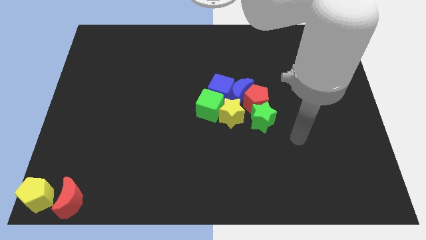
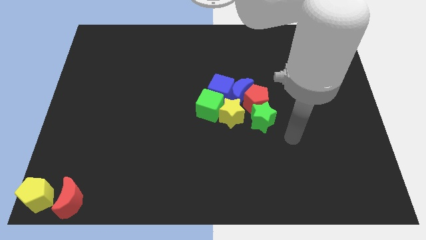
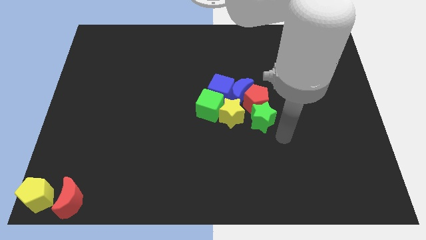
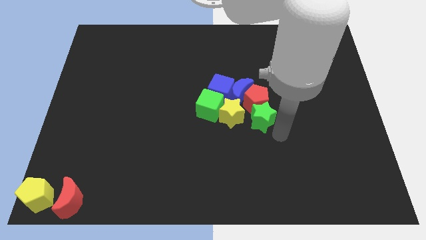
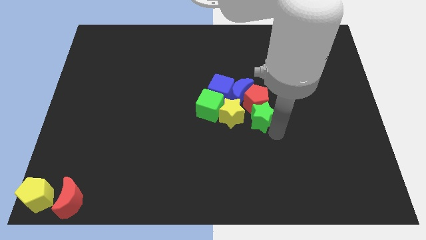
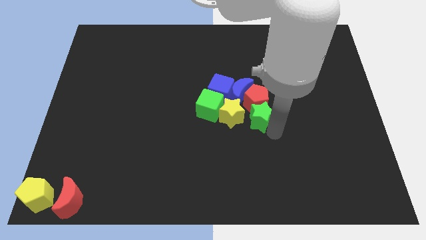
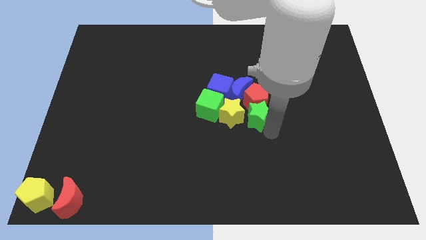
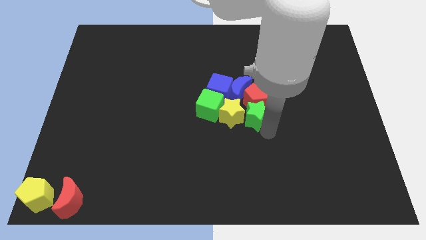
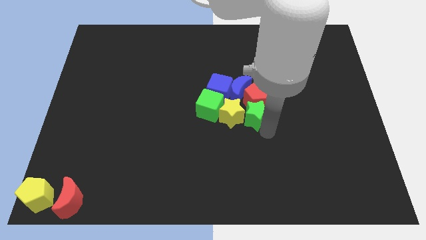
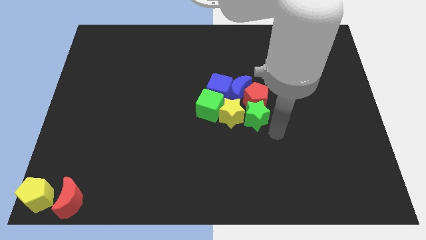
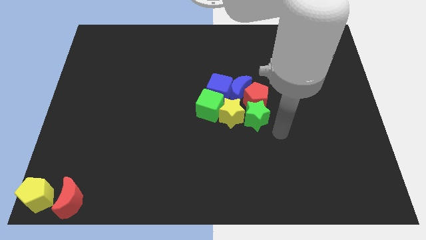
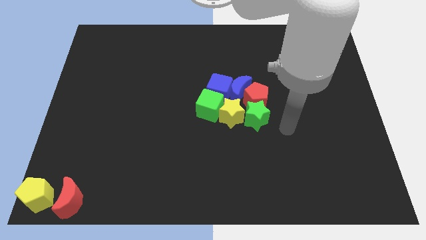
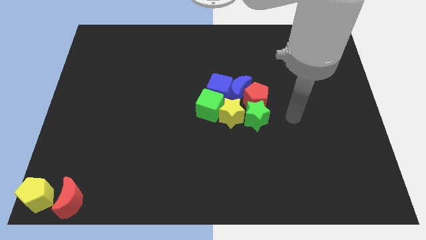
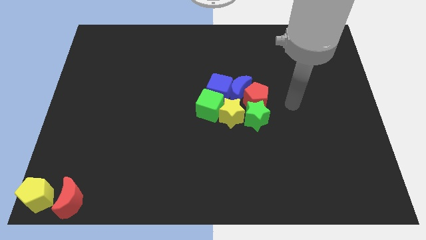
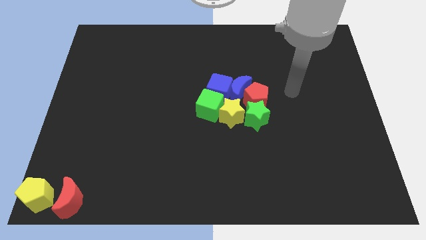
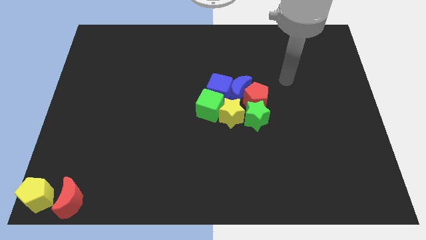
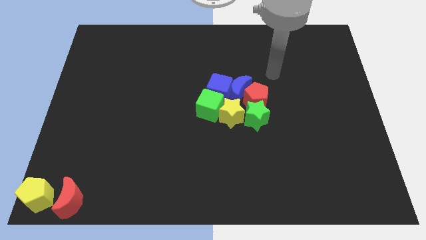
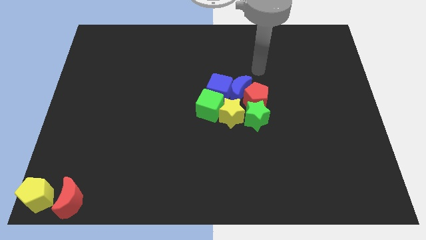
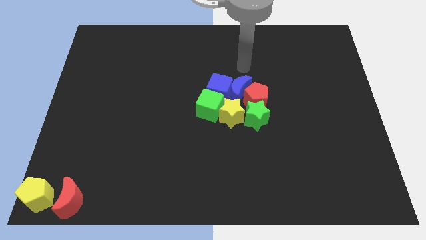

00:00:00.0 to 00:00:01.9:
push the green star into the yellow star

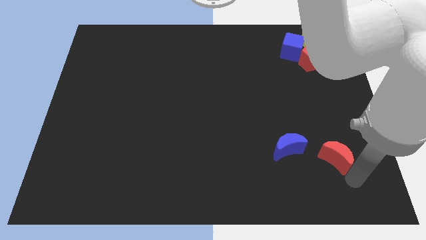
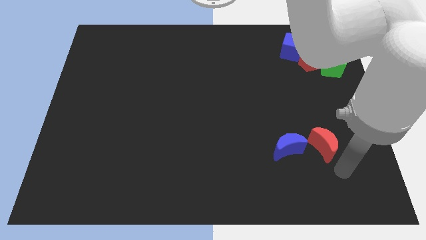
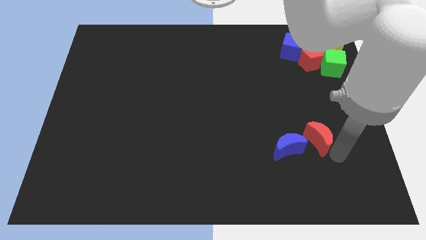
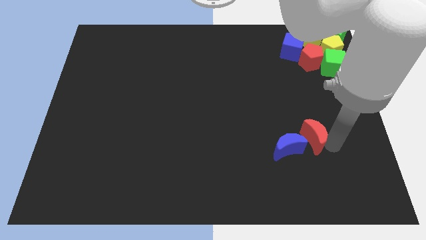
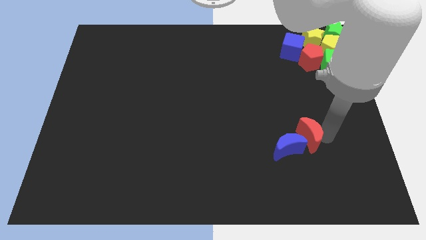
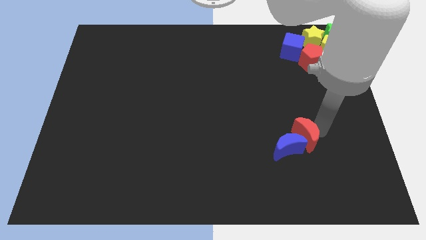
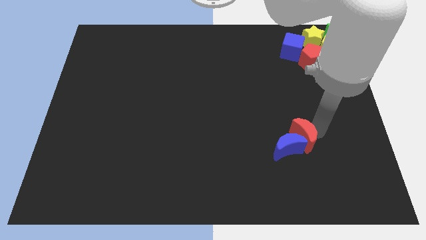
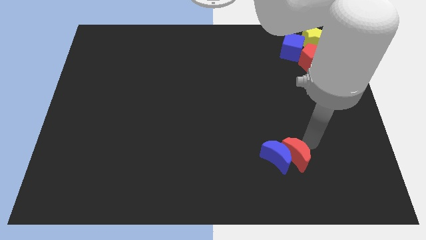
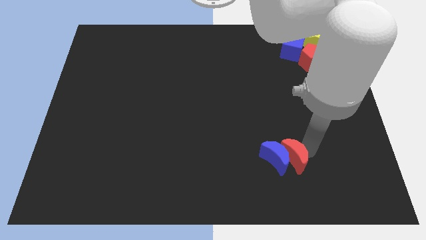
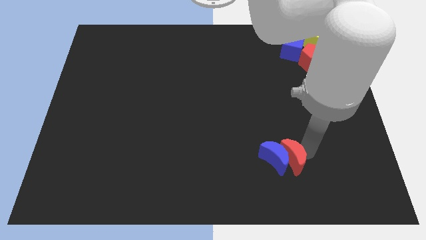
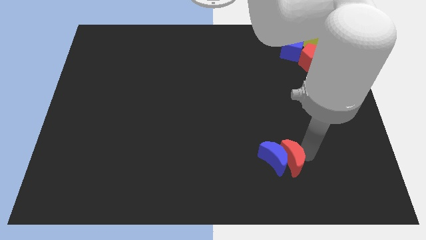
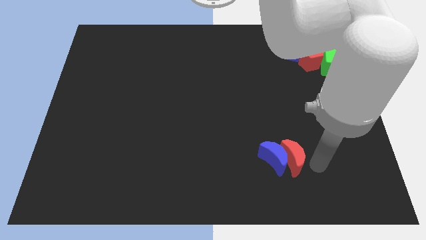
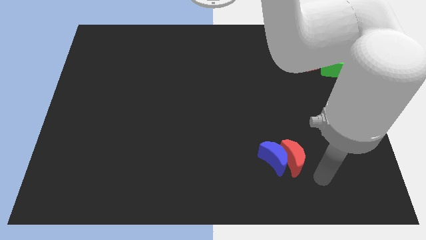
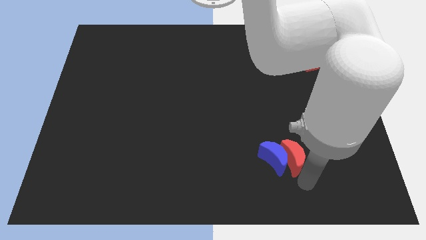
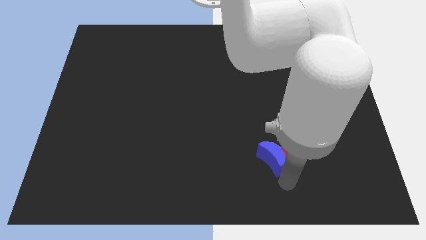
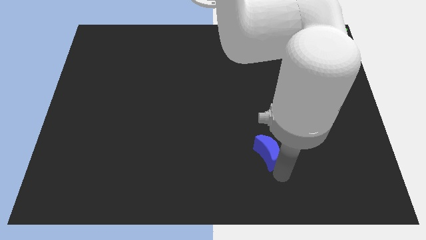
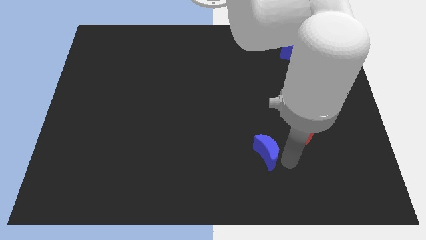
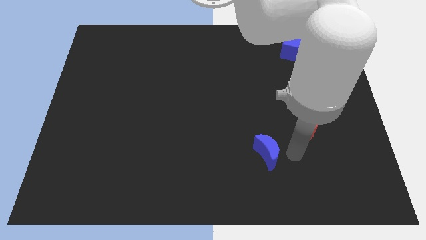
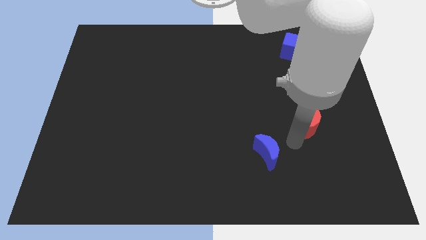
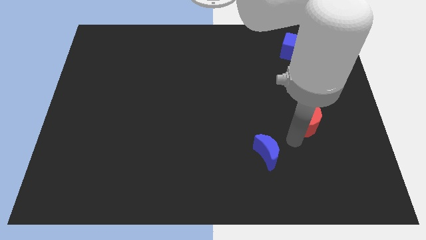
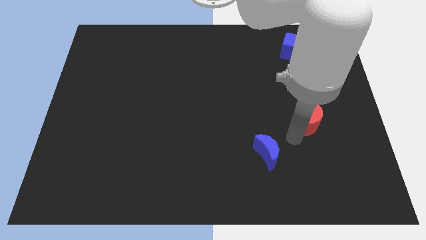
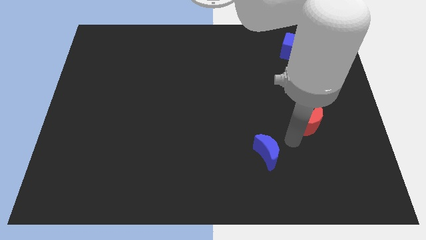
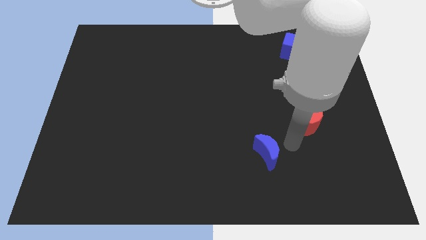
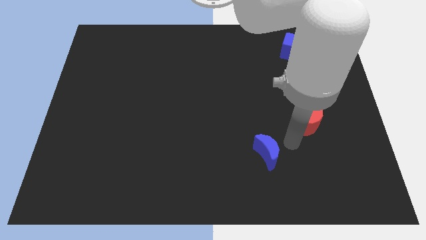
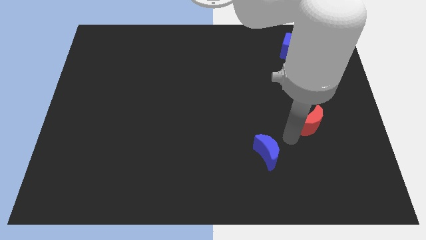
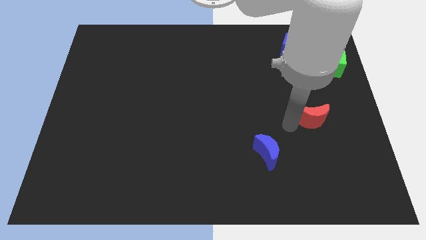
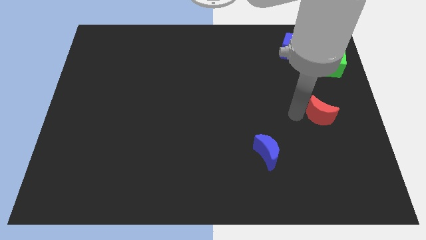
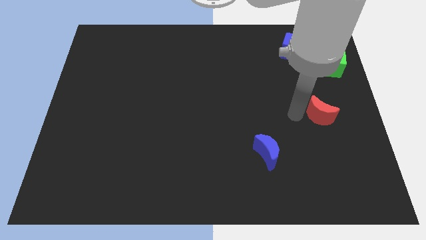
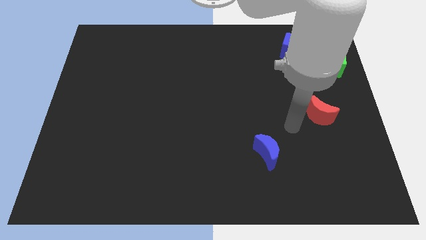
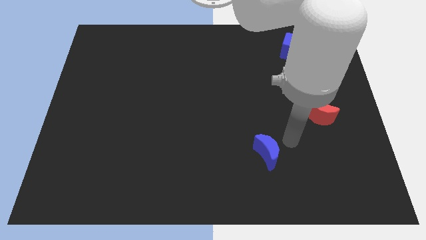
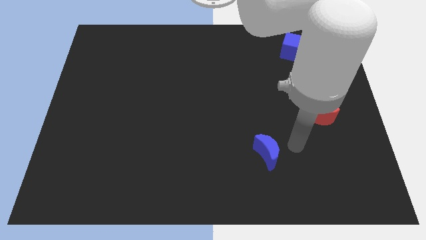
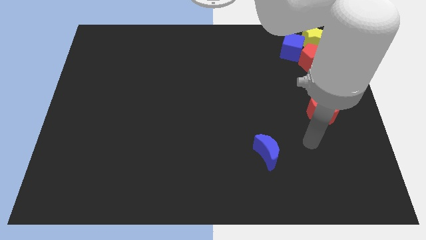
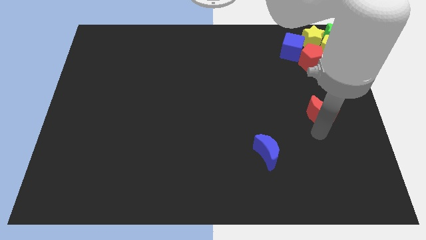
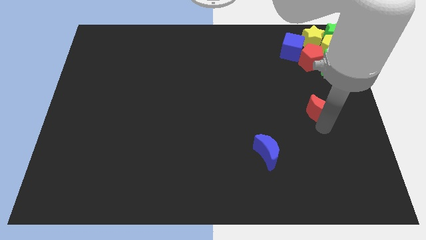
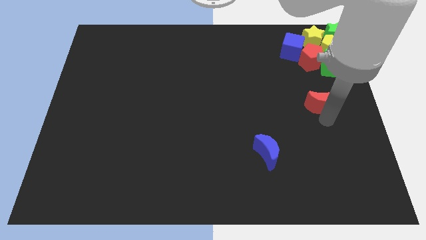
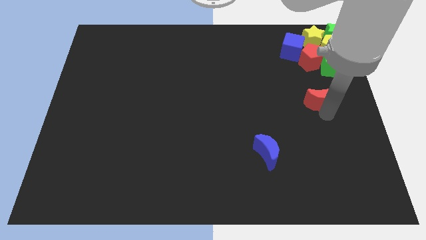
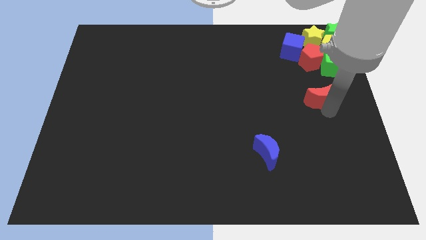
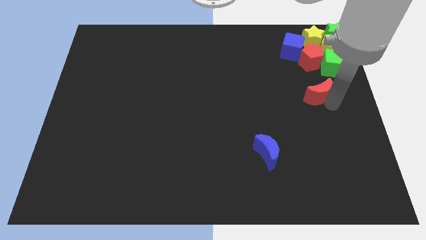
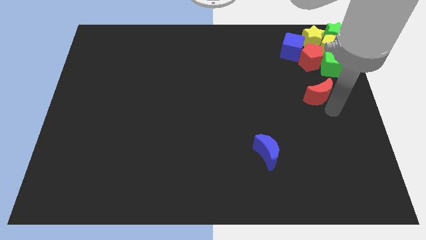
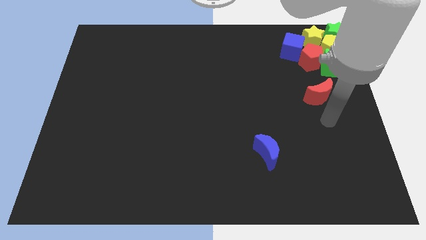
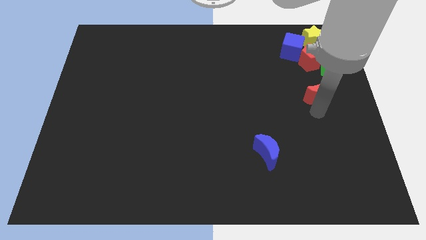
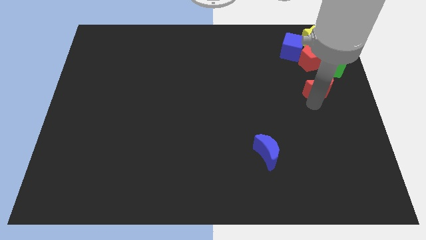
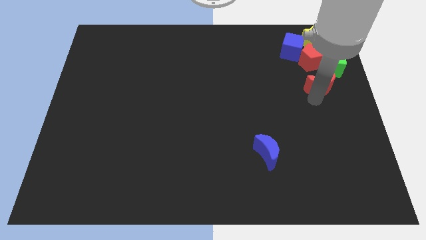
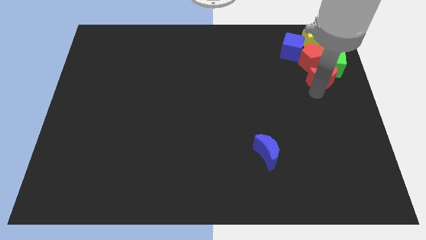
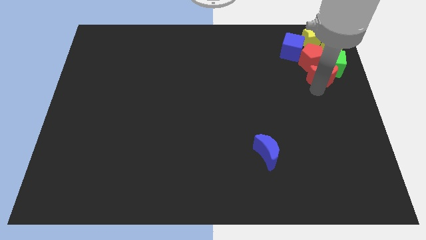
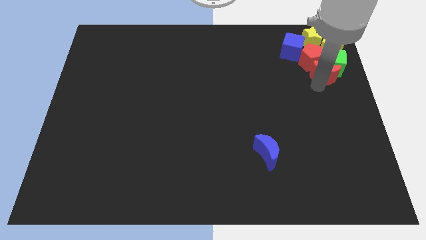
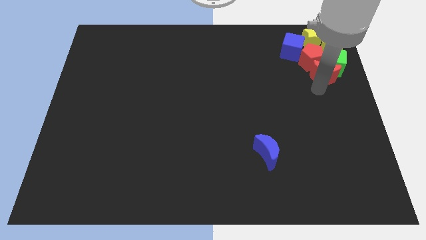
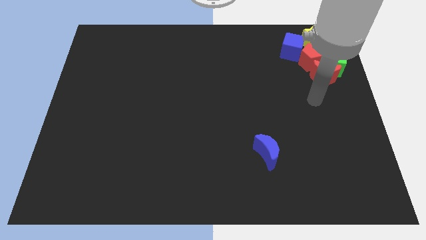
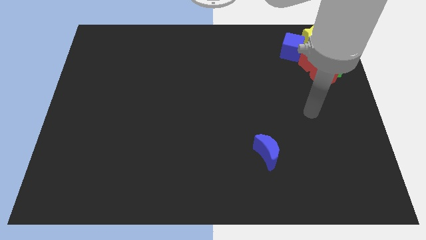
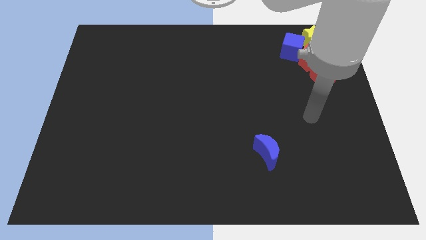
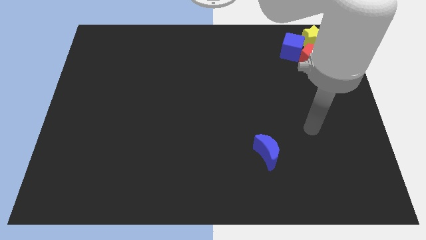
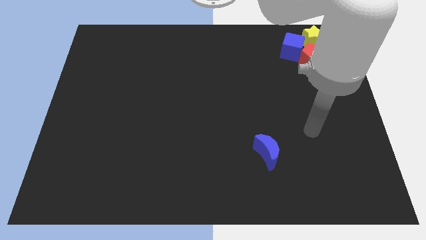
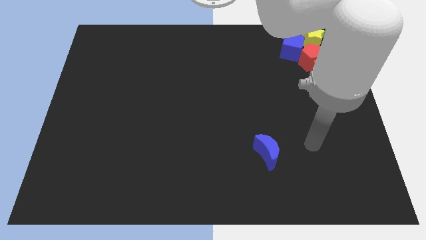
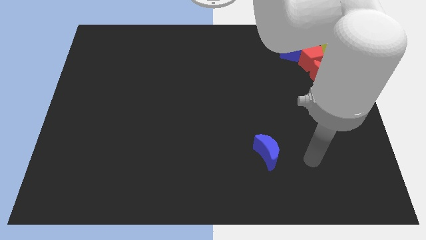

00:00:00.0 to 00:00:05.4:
move the red moon into the group of blocks

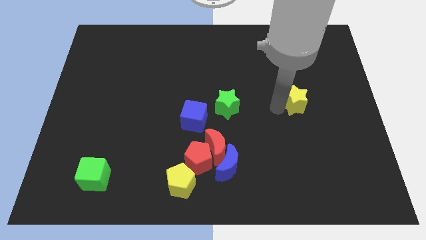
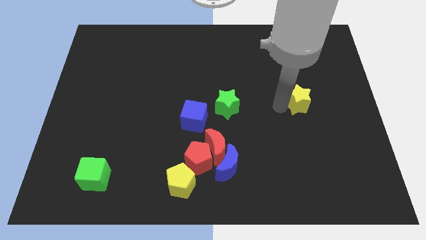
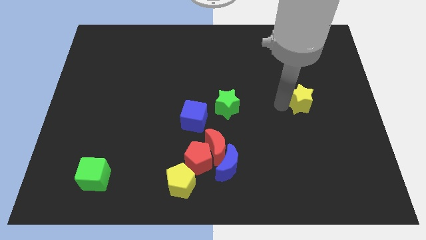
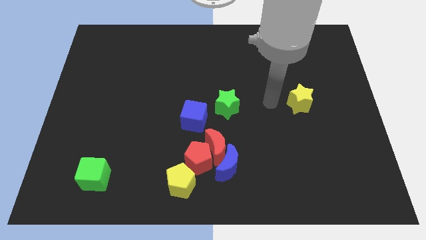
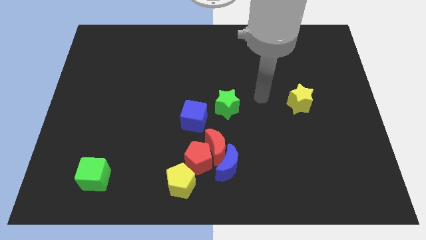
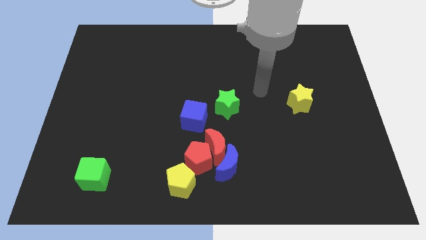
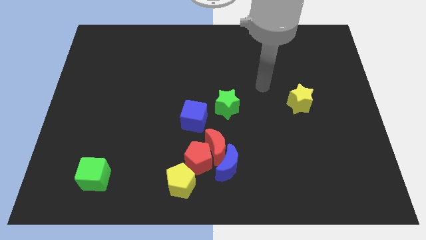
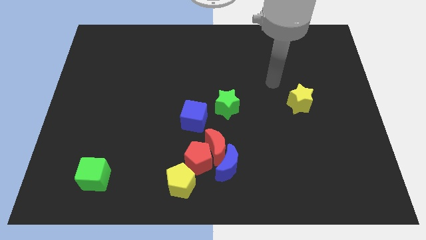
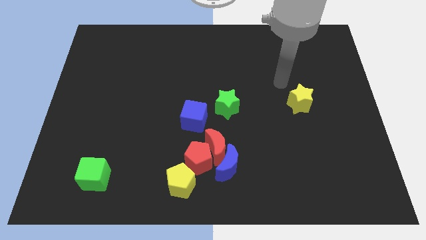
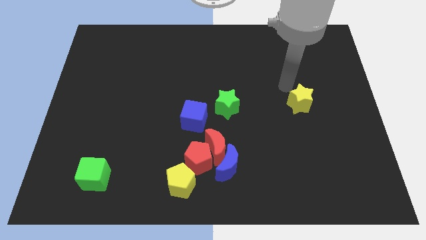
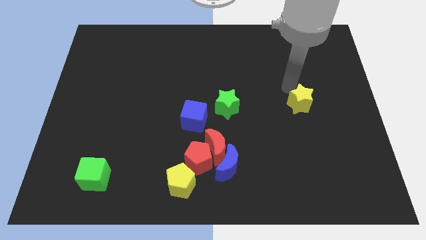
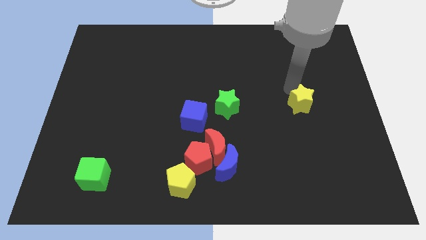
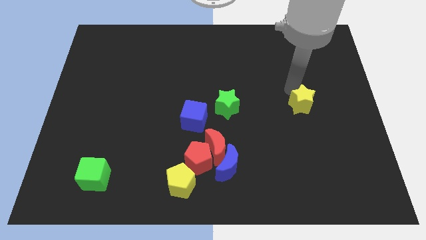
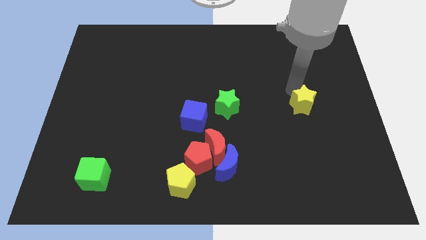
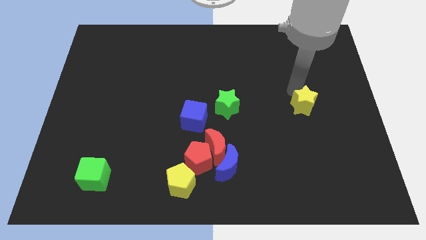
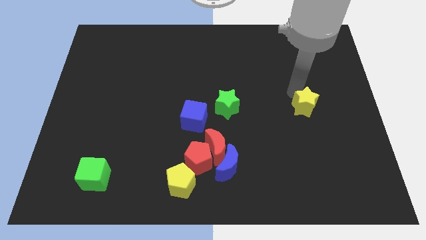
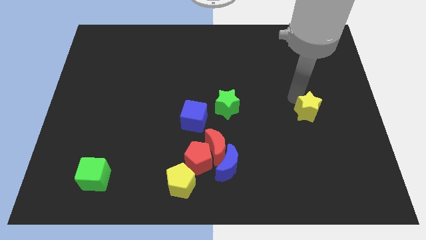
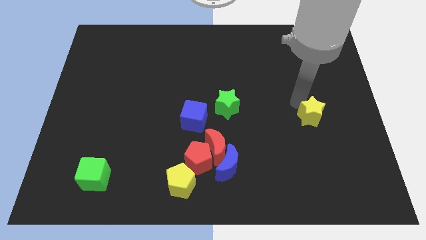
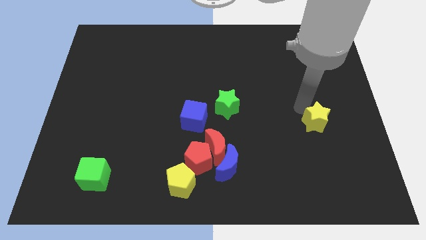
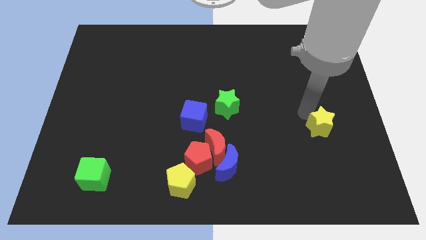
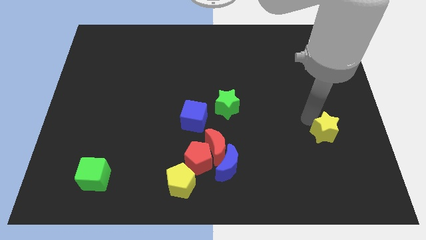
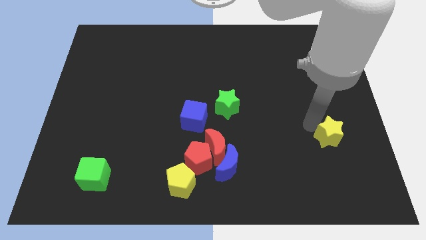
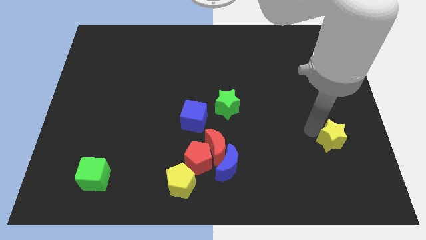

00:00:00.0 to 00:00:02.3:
push the yellow star slightly to the bottom
